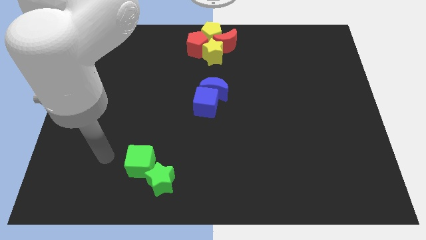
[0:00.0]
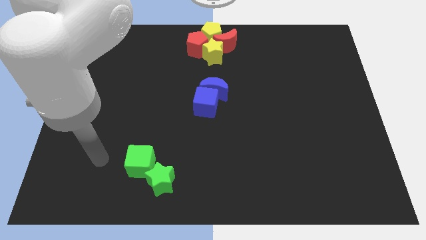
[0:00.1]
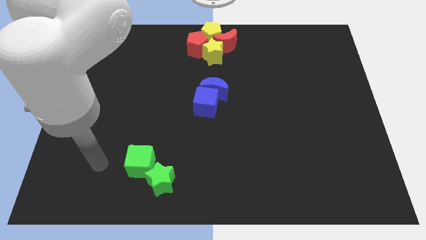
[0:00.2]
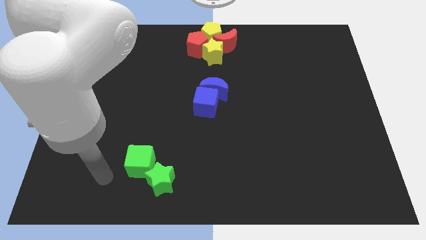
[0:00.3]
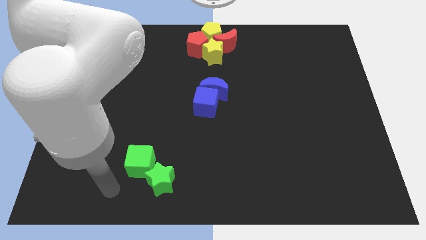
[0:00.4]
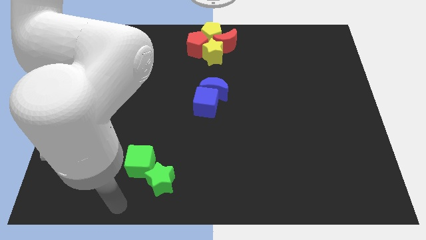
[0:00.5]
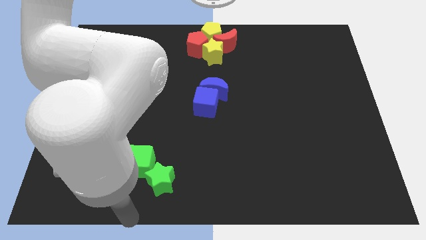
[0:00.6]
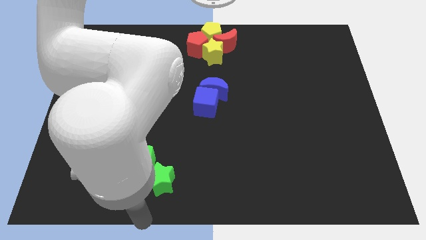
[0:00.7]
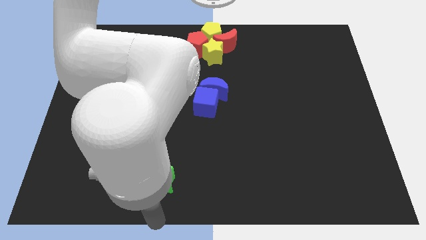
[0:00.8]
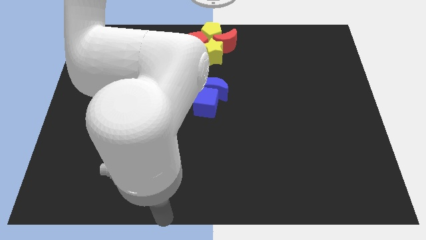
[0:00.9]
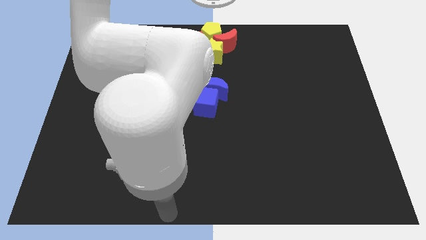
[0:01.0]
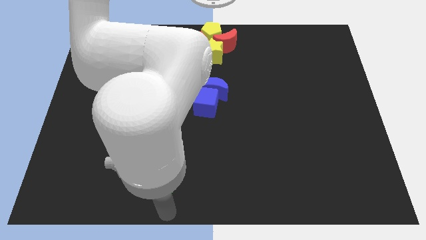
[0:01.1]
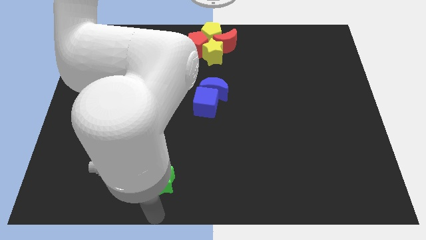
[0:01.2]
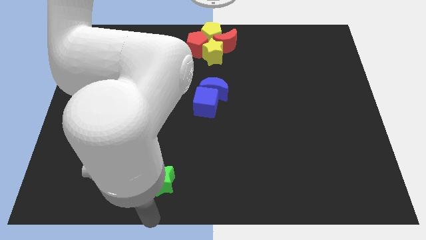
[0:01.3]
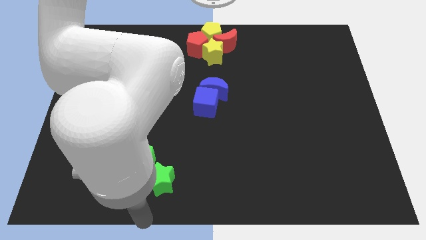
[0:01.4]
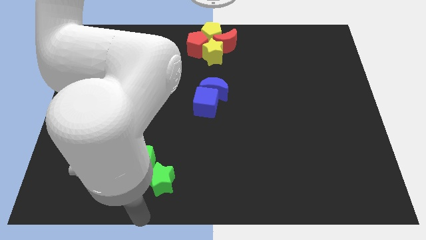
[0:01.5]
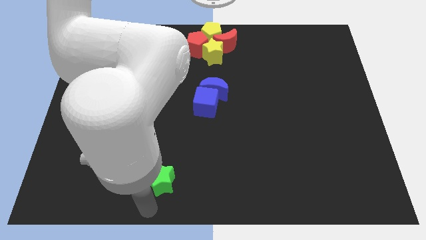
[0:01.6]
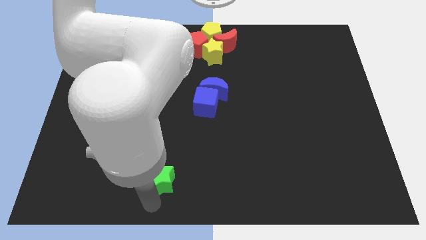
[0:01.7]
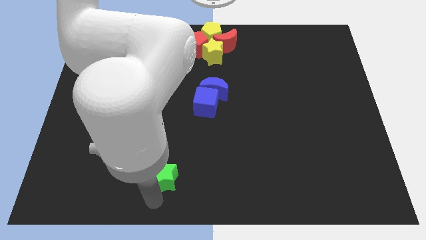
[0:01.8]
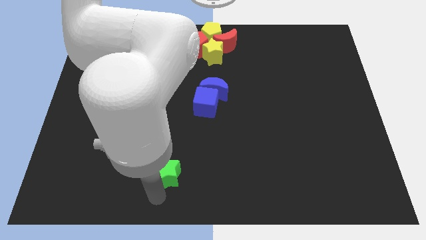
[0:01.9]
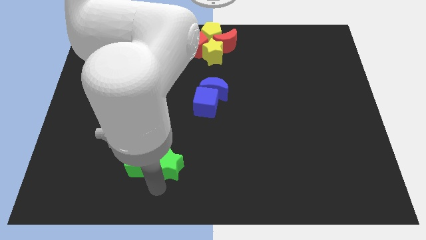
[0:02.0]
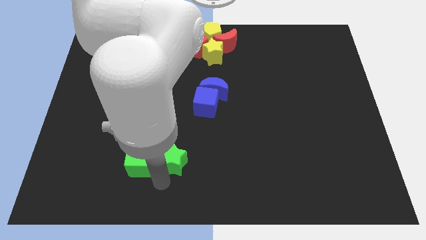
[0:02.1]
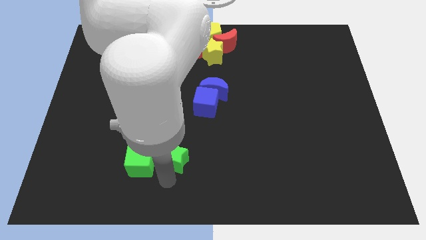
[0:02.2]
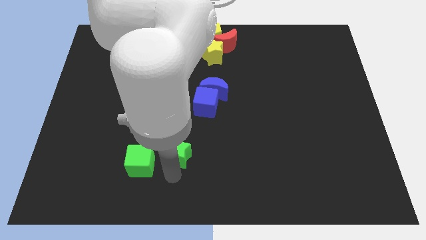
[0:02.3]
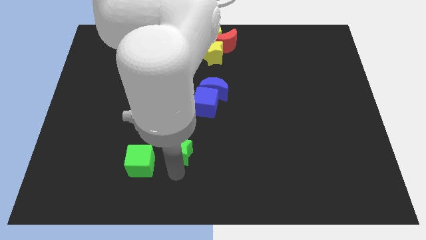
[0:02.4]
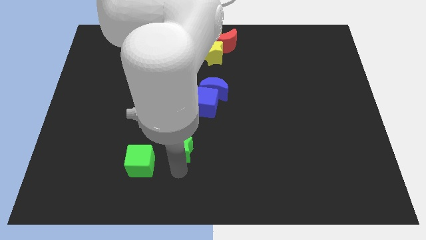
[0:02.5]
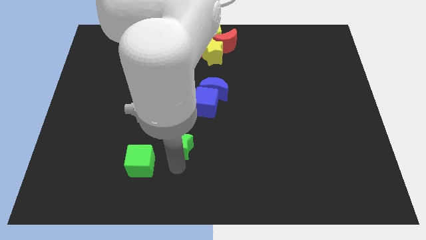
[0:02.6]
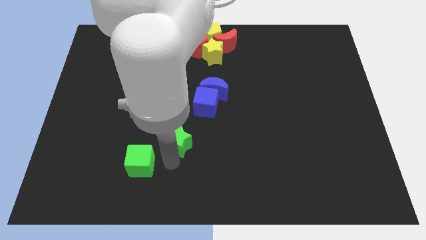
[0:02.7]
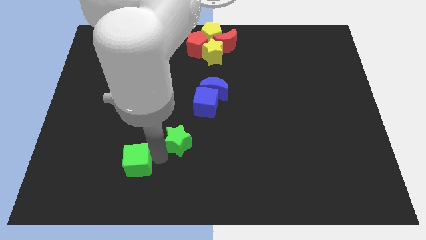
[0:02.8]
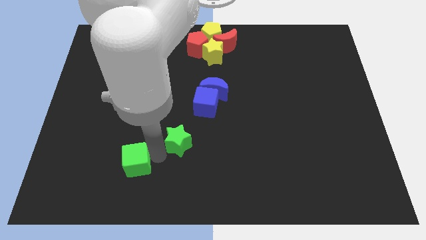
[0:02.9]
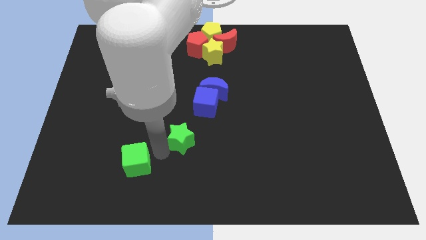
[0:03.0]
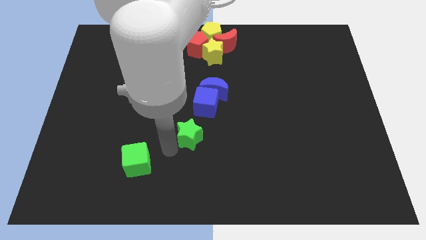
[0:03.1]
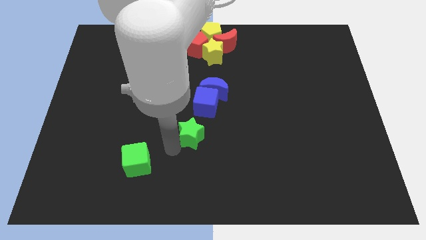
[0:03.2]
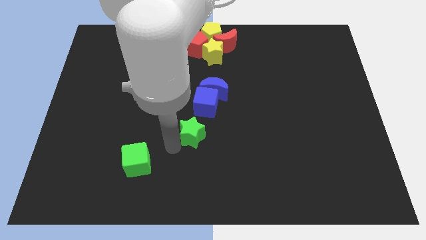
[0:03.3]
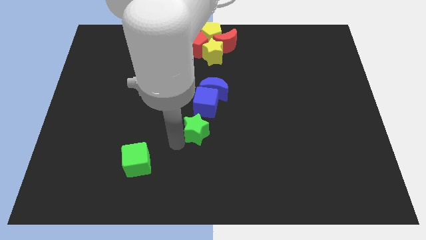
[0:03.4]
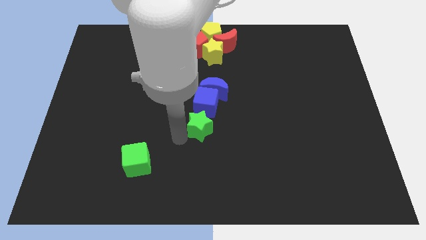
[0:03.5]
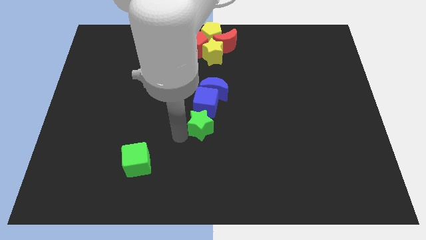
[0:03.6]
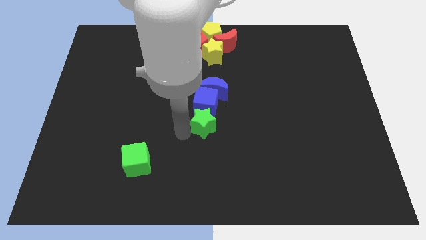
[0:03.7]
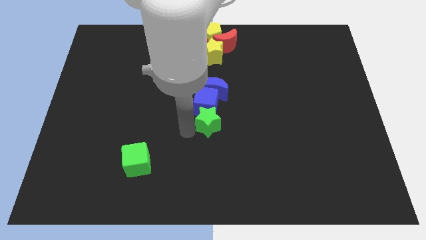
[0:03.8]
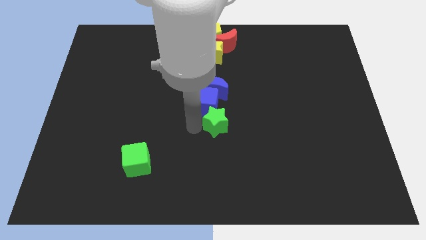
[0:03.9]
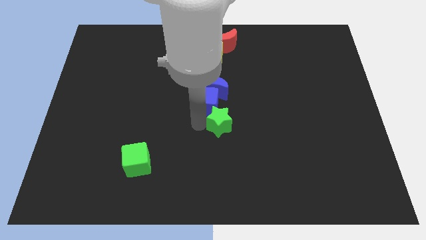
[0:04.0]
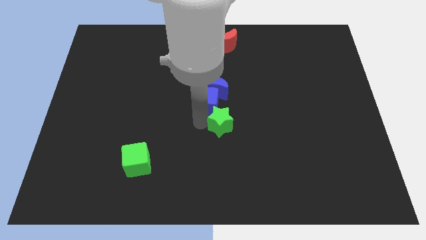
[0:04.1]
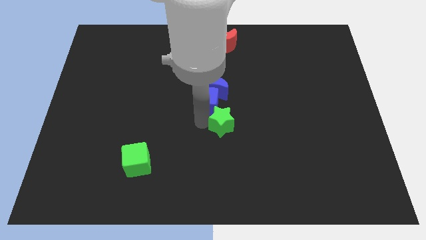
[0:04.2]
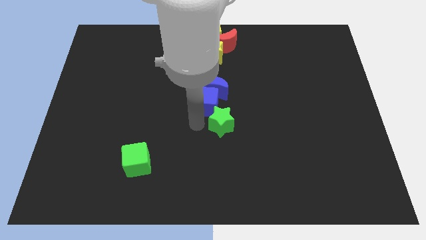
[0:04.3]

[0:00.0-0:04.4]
separate the green cube and green star

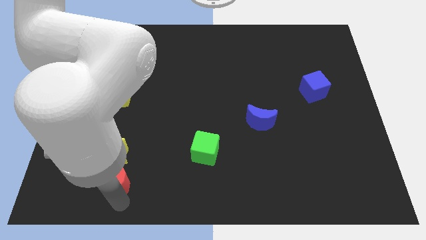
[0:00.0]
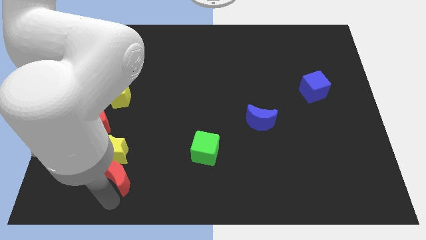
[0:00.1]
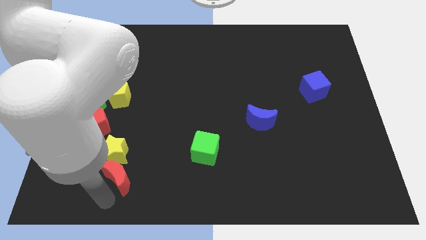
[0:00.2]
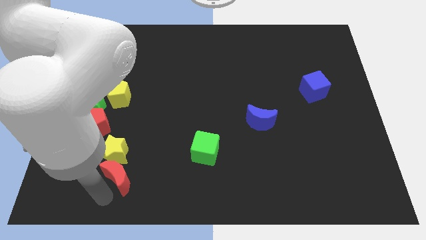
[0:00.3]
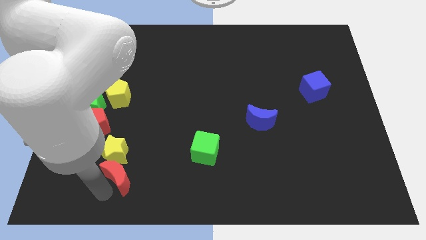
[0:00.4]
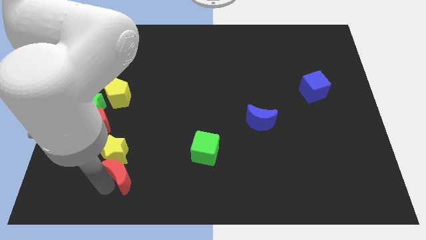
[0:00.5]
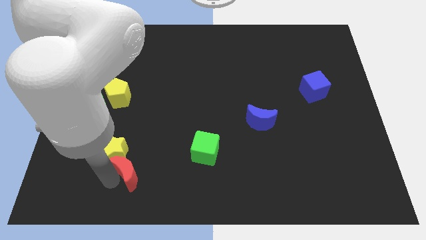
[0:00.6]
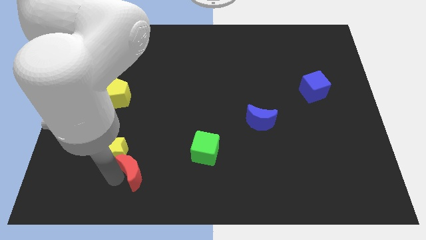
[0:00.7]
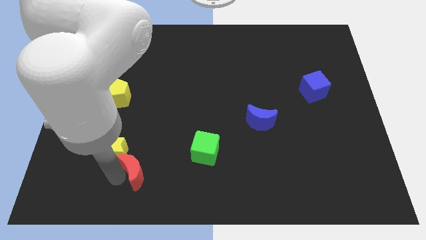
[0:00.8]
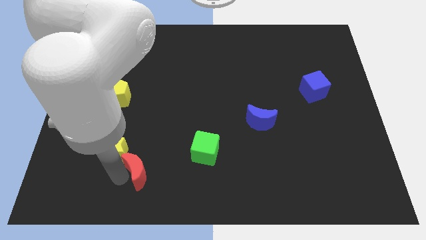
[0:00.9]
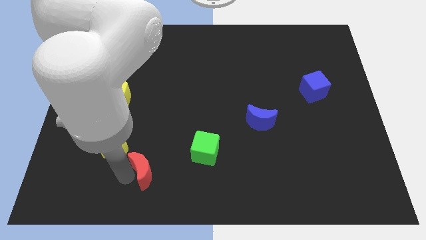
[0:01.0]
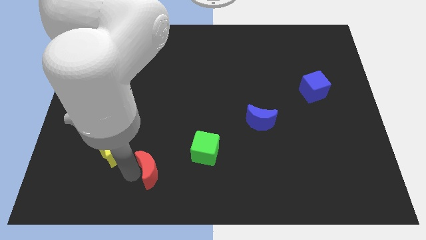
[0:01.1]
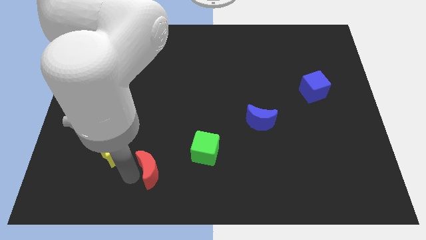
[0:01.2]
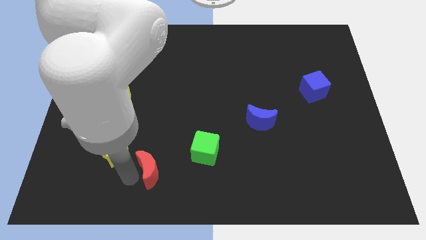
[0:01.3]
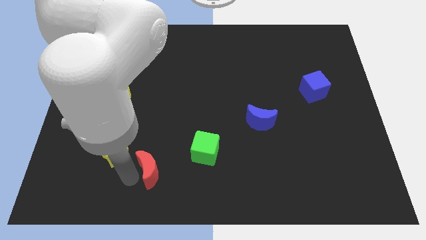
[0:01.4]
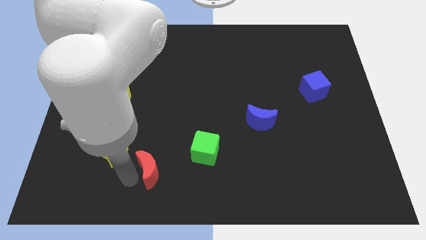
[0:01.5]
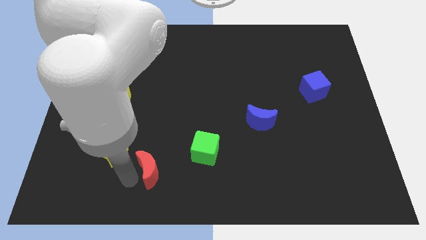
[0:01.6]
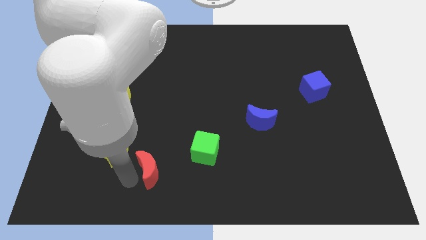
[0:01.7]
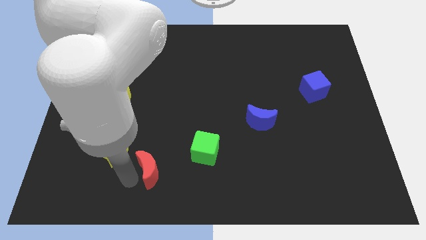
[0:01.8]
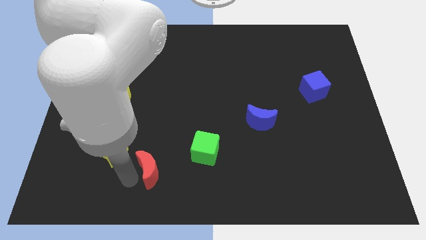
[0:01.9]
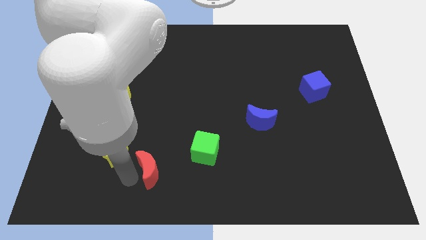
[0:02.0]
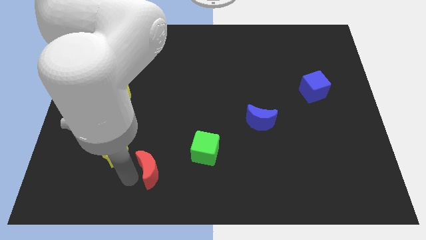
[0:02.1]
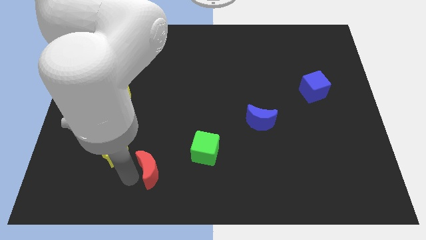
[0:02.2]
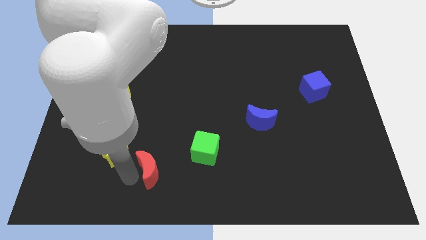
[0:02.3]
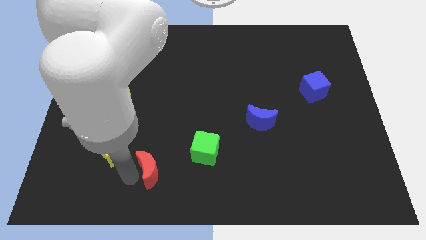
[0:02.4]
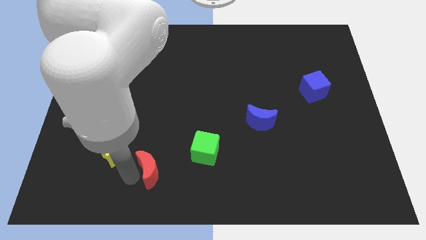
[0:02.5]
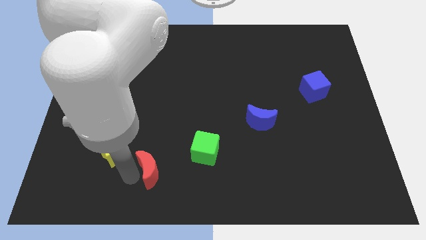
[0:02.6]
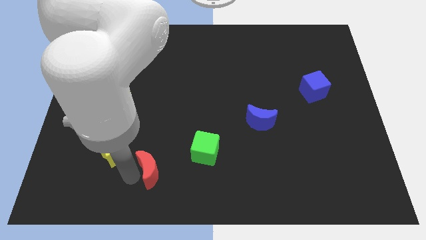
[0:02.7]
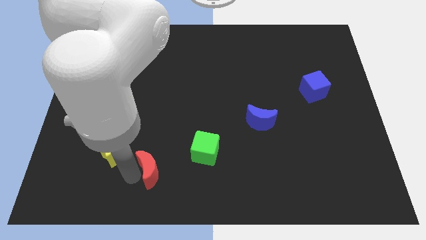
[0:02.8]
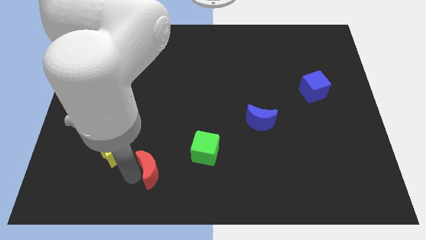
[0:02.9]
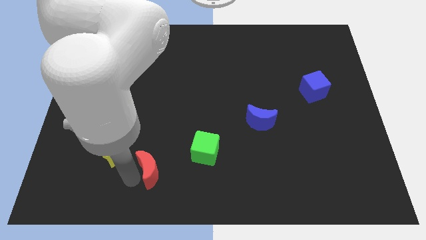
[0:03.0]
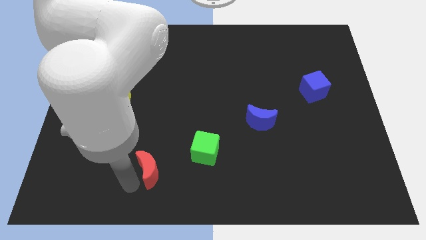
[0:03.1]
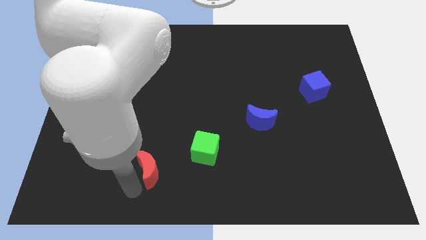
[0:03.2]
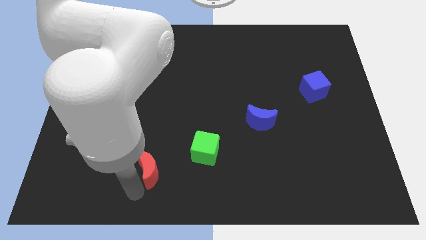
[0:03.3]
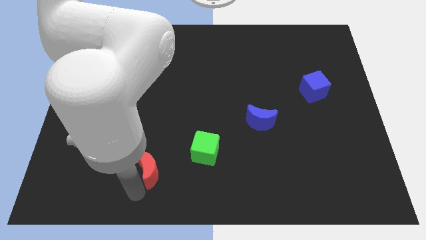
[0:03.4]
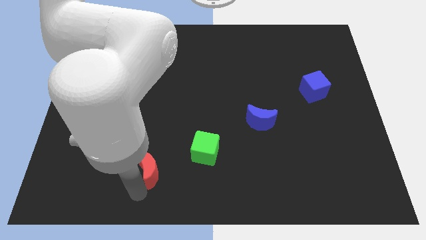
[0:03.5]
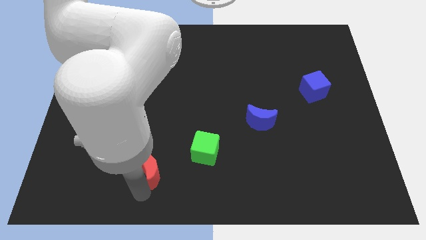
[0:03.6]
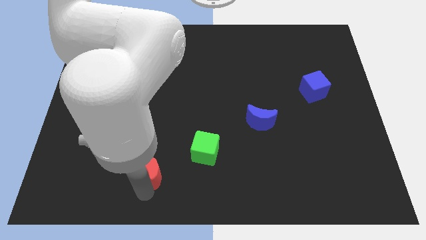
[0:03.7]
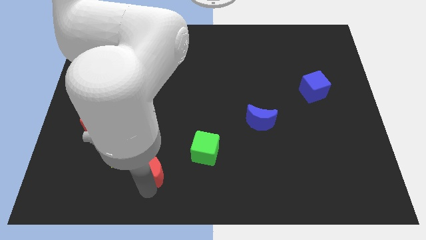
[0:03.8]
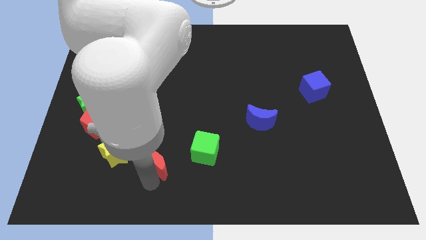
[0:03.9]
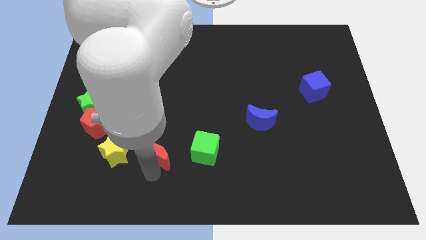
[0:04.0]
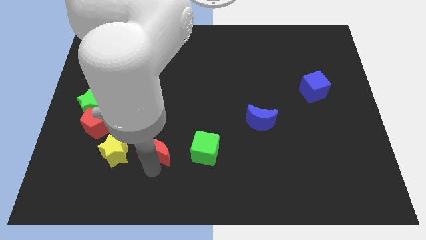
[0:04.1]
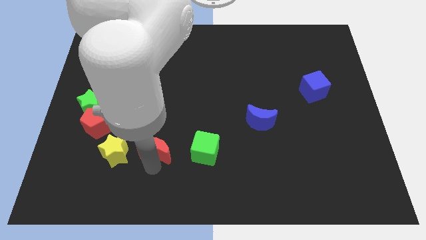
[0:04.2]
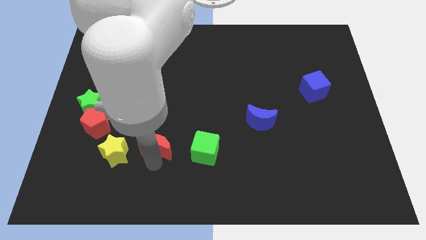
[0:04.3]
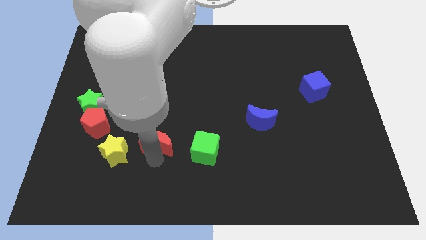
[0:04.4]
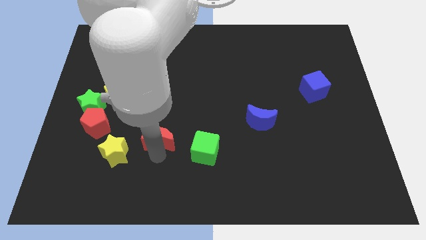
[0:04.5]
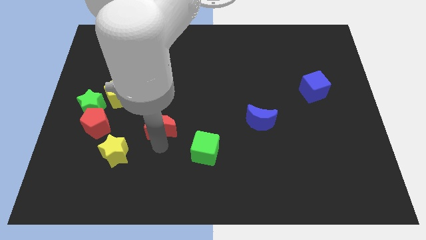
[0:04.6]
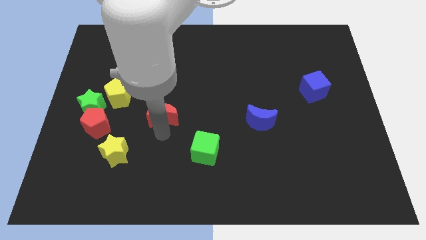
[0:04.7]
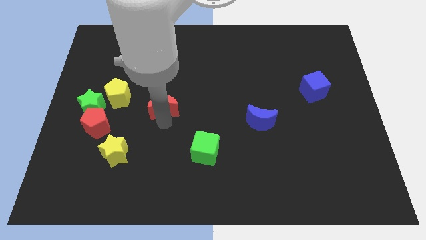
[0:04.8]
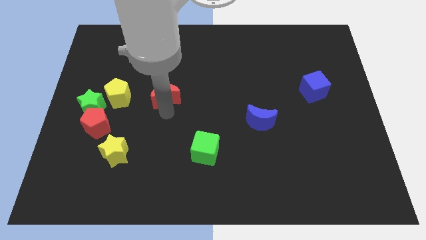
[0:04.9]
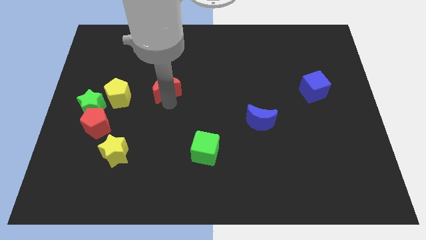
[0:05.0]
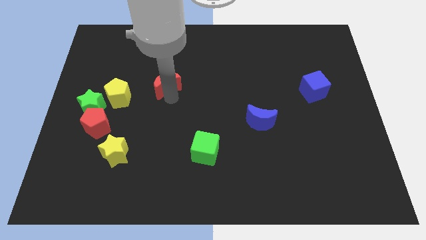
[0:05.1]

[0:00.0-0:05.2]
move the red crescent right to the yellow pentagon
